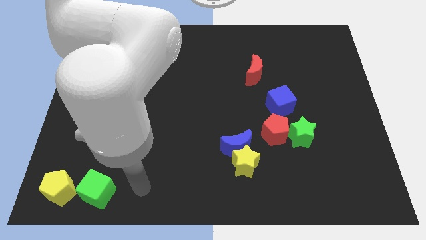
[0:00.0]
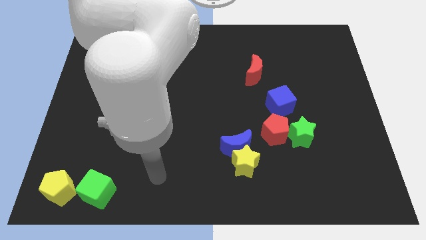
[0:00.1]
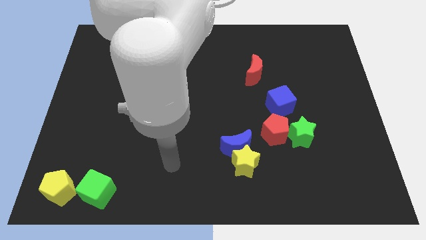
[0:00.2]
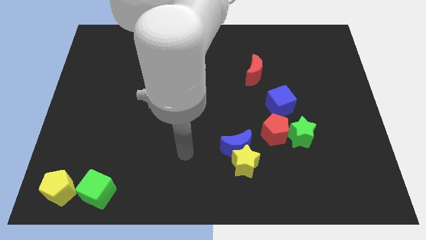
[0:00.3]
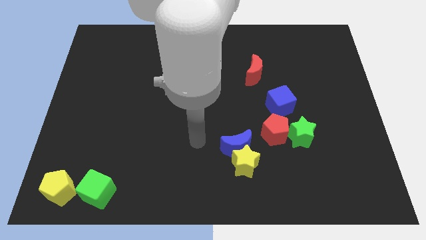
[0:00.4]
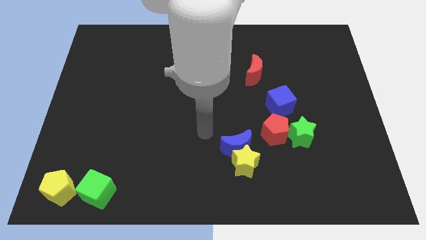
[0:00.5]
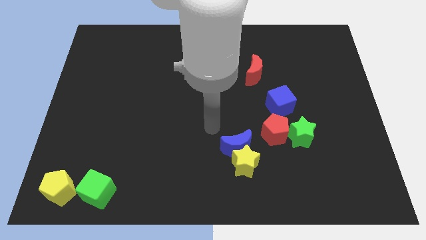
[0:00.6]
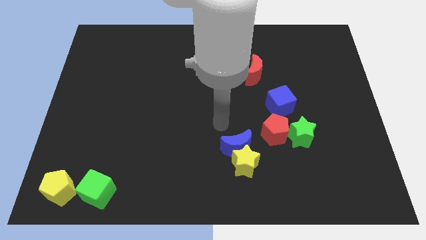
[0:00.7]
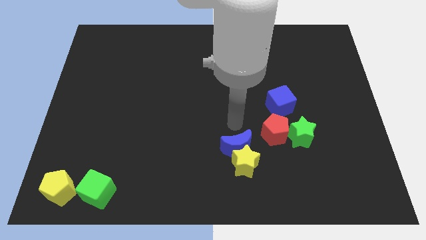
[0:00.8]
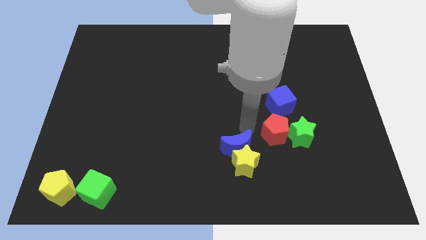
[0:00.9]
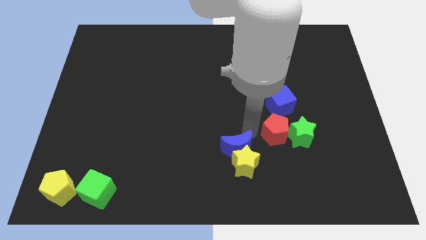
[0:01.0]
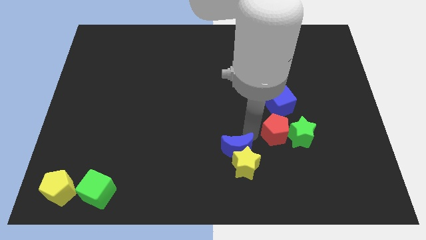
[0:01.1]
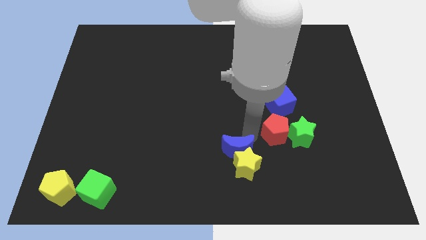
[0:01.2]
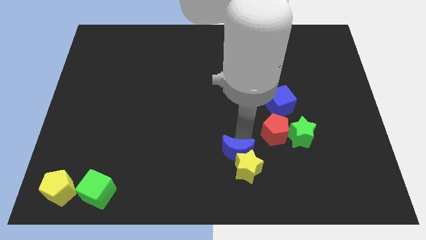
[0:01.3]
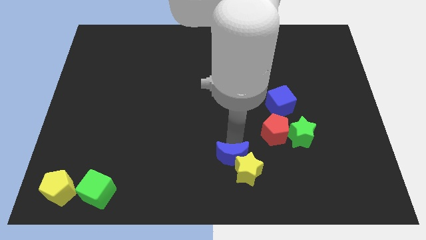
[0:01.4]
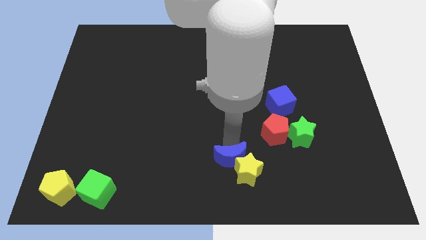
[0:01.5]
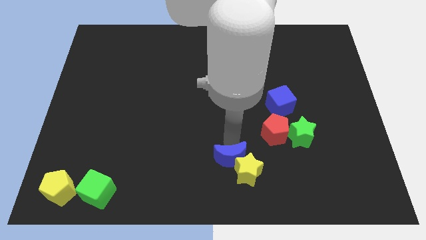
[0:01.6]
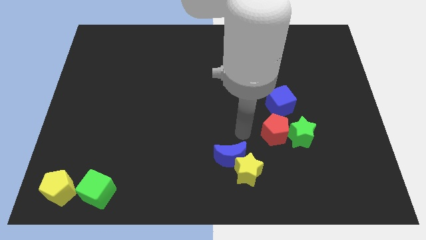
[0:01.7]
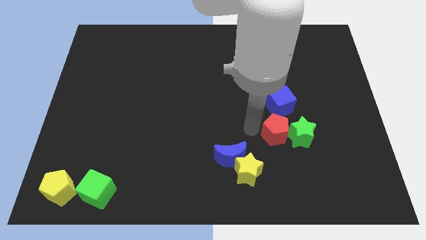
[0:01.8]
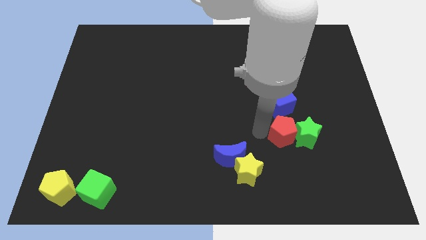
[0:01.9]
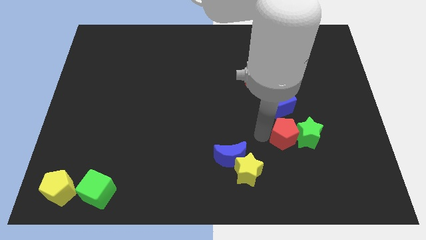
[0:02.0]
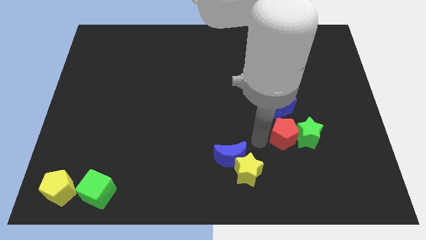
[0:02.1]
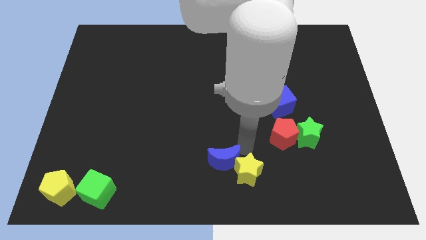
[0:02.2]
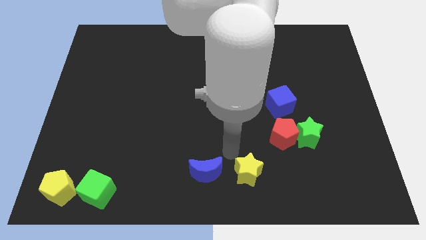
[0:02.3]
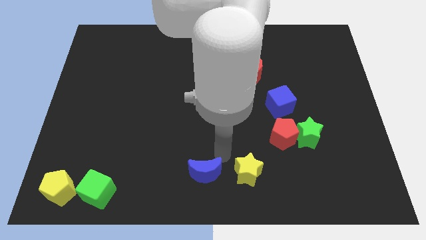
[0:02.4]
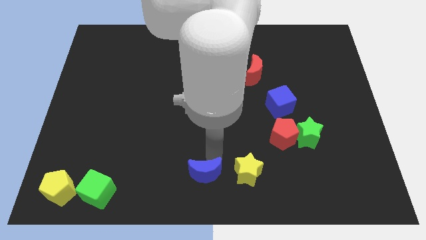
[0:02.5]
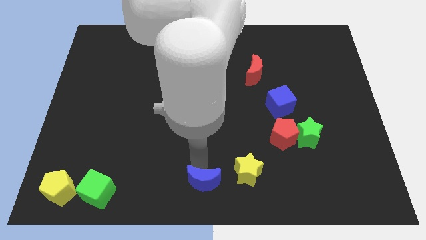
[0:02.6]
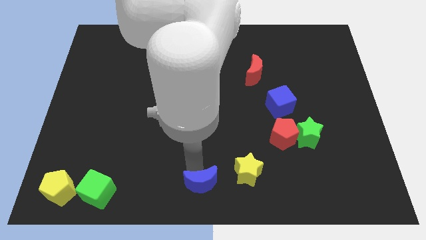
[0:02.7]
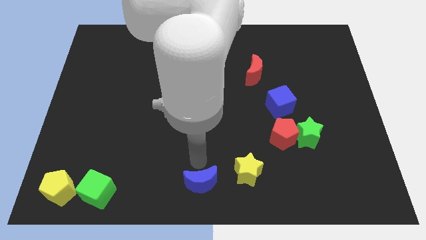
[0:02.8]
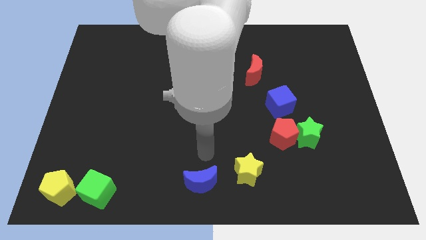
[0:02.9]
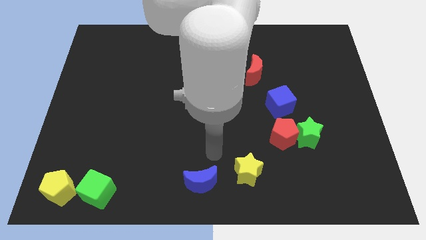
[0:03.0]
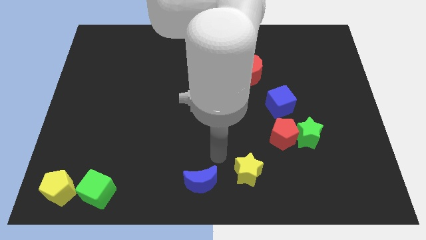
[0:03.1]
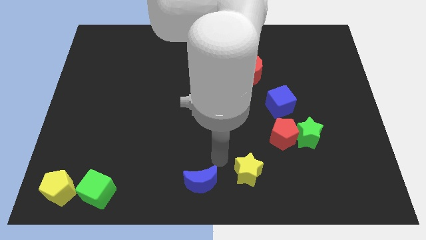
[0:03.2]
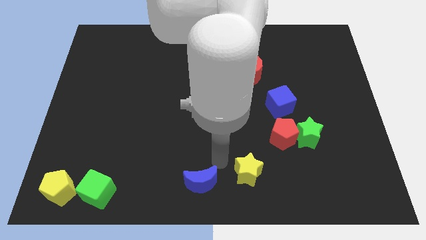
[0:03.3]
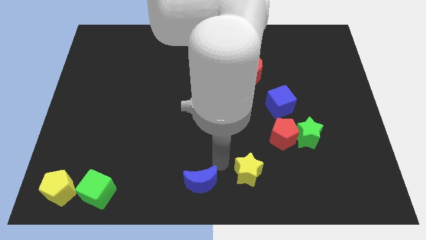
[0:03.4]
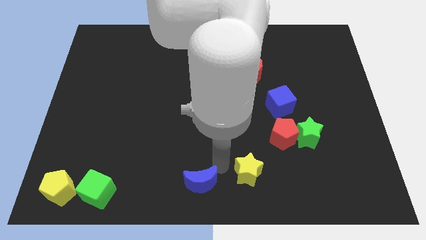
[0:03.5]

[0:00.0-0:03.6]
push the blue moon towards the bottom center of the board

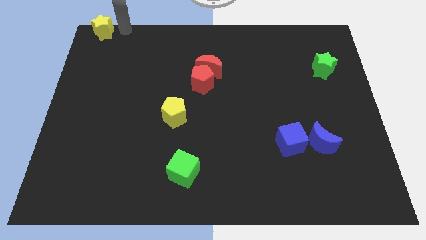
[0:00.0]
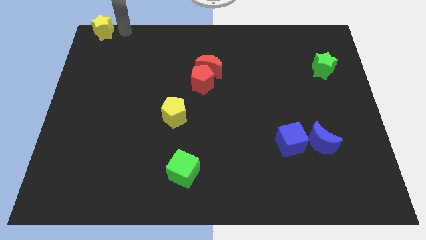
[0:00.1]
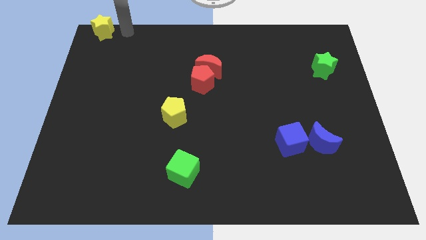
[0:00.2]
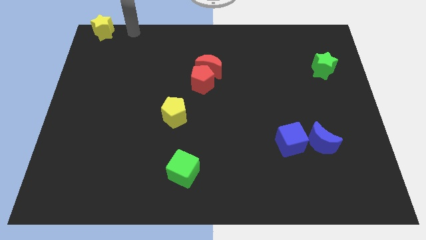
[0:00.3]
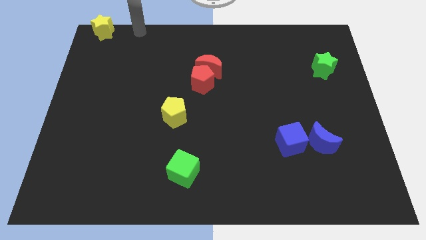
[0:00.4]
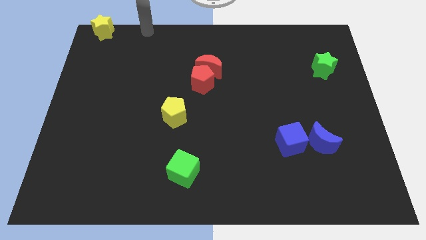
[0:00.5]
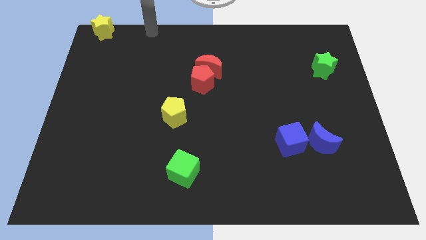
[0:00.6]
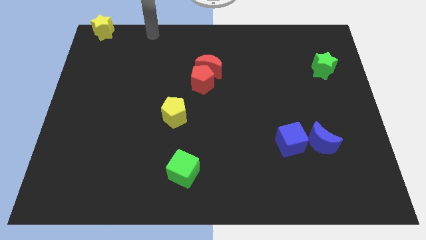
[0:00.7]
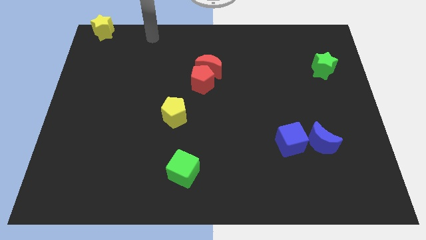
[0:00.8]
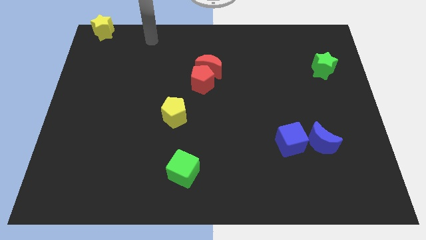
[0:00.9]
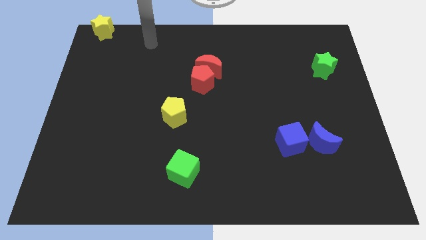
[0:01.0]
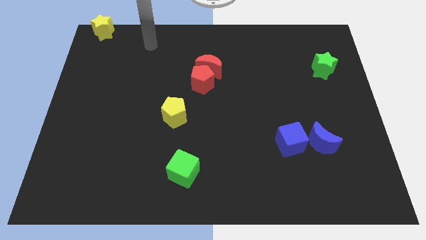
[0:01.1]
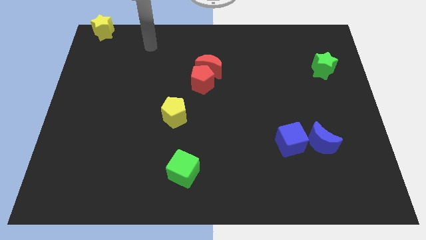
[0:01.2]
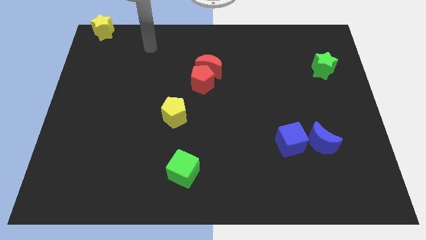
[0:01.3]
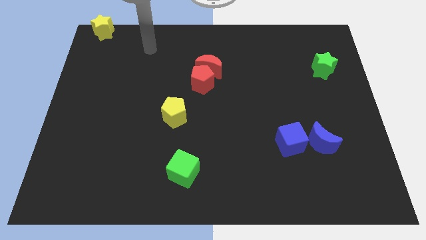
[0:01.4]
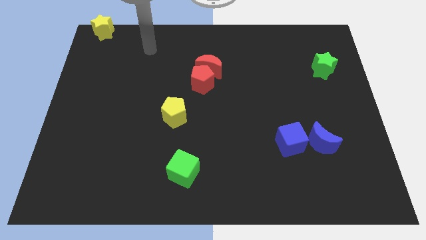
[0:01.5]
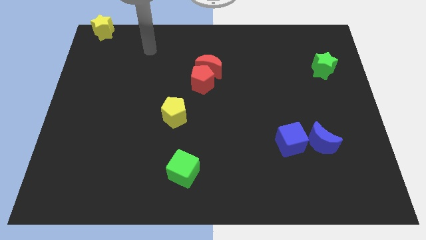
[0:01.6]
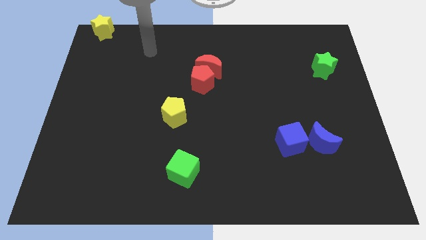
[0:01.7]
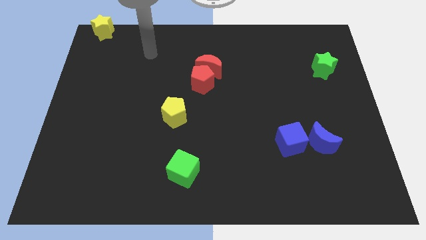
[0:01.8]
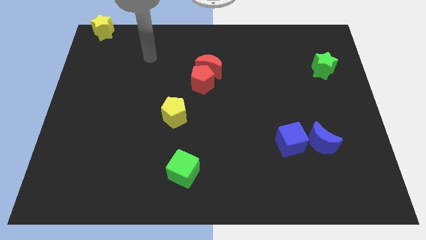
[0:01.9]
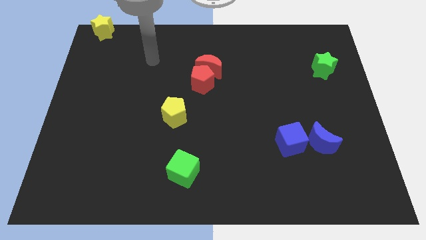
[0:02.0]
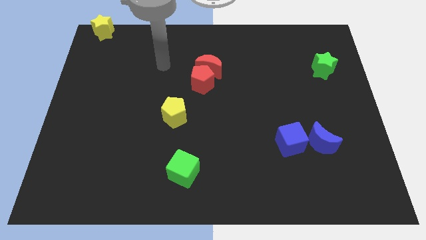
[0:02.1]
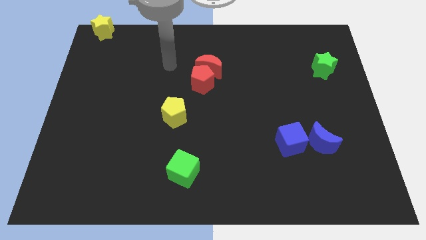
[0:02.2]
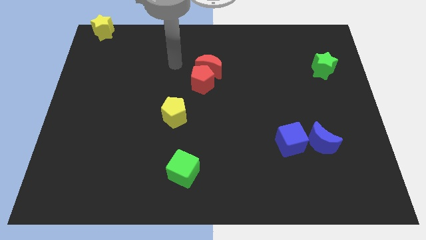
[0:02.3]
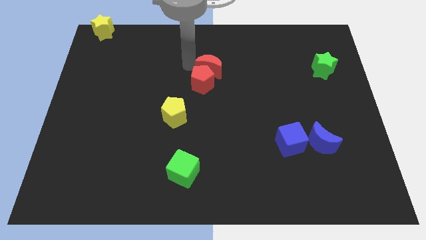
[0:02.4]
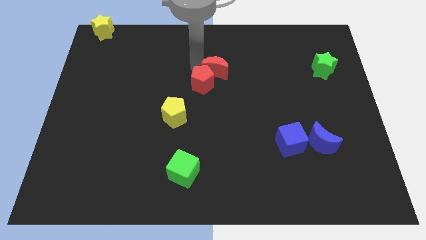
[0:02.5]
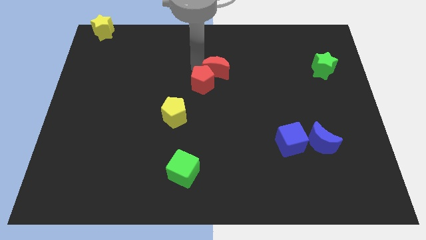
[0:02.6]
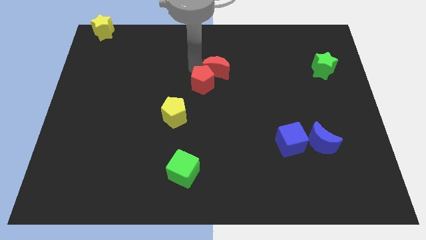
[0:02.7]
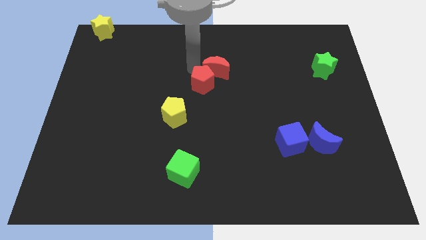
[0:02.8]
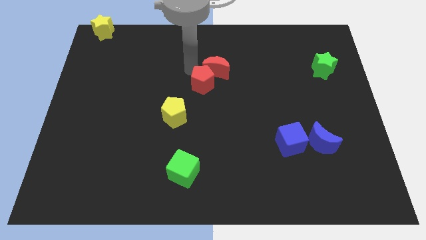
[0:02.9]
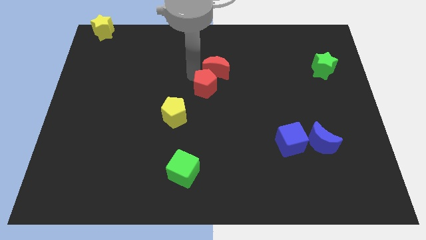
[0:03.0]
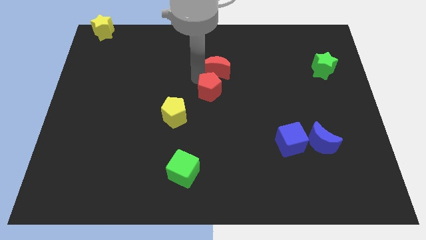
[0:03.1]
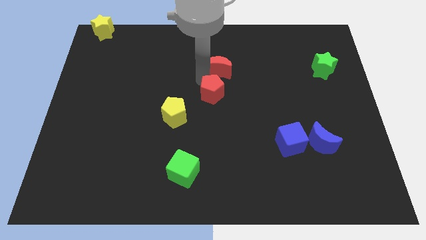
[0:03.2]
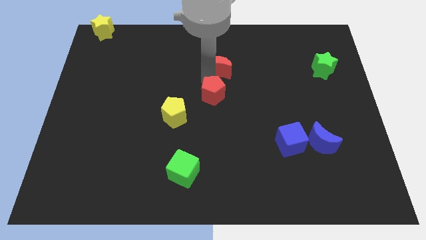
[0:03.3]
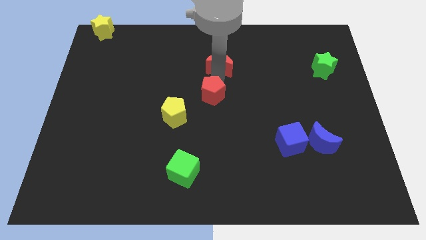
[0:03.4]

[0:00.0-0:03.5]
place your hand in between the red crescent and red pentagon

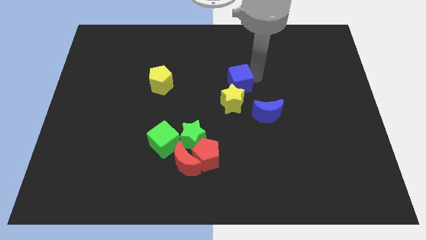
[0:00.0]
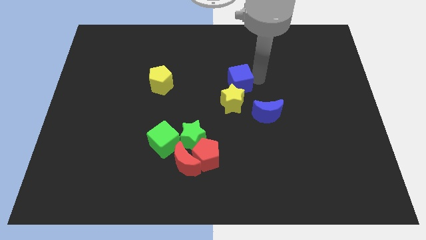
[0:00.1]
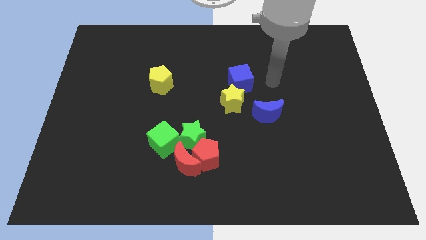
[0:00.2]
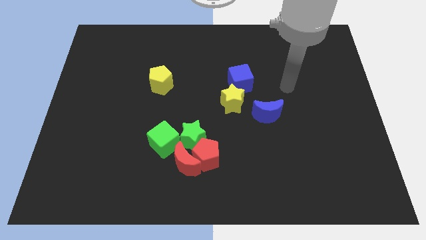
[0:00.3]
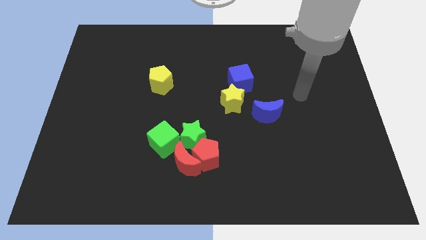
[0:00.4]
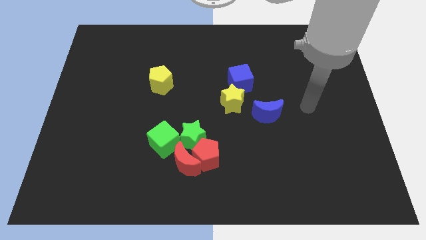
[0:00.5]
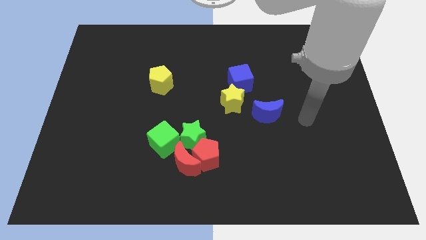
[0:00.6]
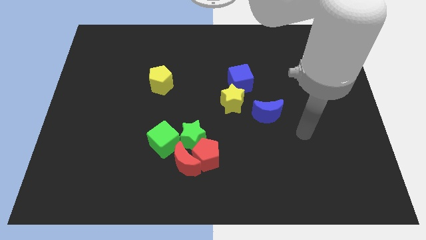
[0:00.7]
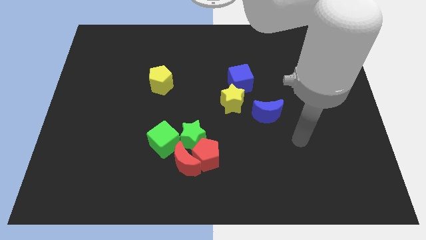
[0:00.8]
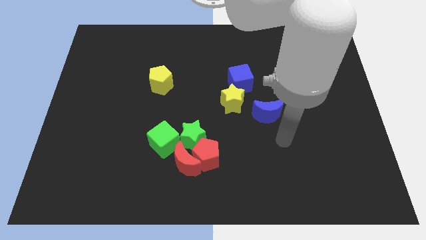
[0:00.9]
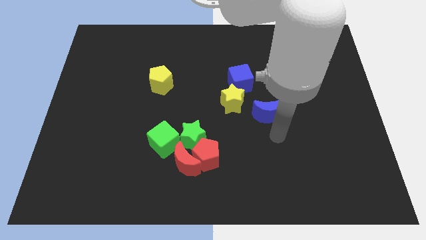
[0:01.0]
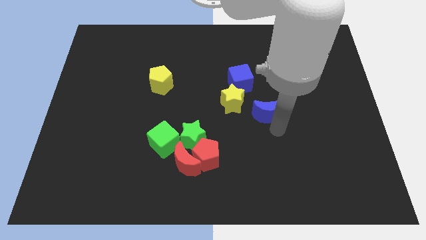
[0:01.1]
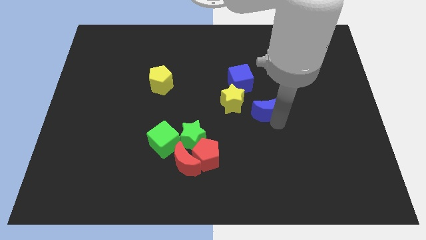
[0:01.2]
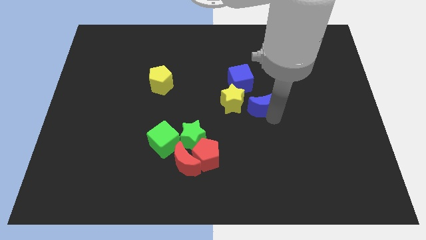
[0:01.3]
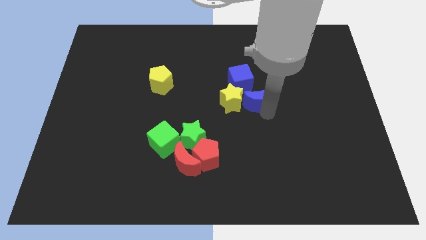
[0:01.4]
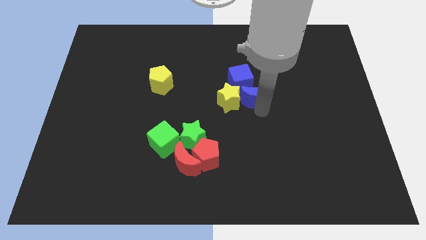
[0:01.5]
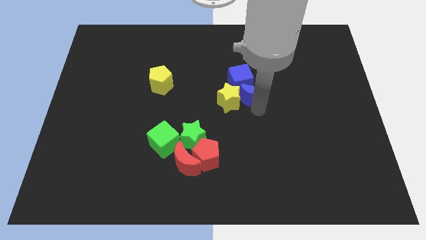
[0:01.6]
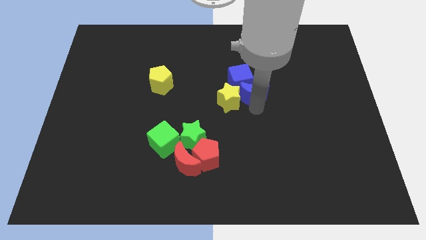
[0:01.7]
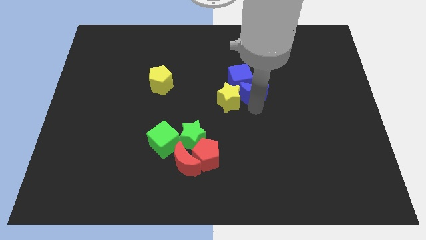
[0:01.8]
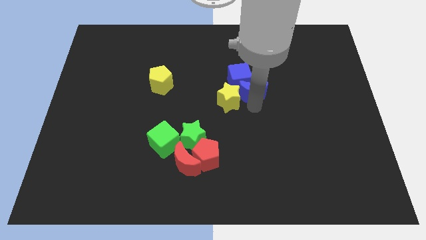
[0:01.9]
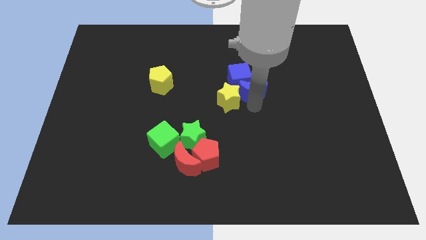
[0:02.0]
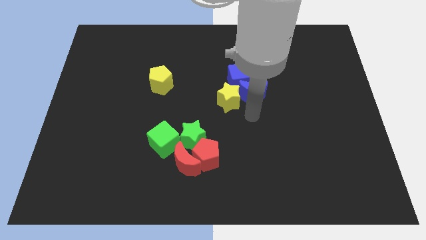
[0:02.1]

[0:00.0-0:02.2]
push the blue moon into the blue cube
